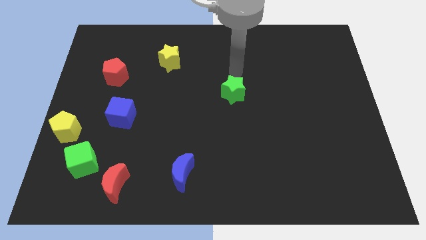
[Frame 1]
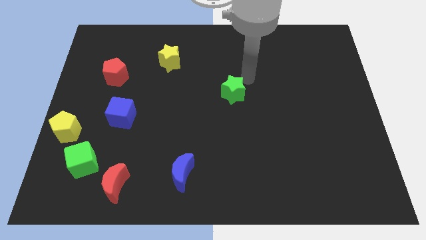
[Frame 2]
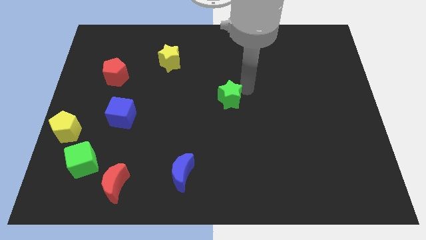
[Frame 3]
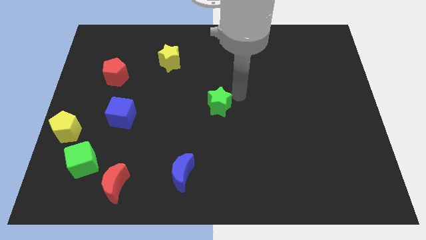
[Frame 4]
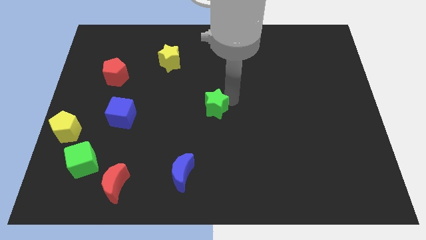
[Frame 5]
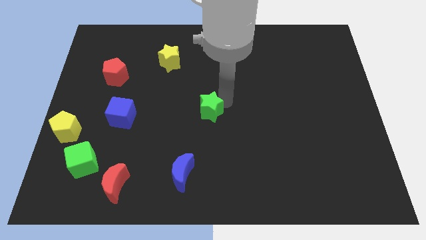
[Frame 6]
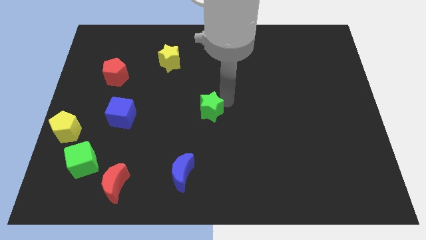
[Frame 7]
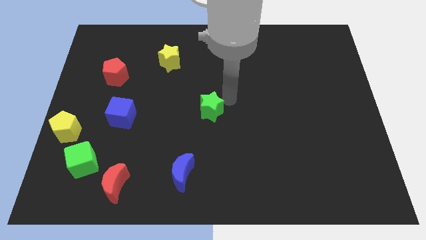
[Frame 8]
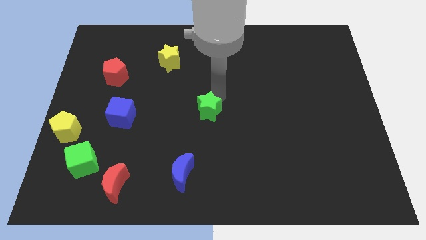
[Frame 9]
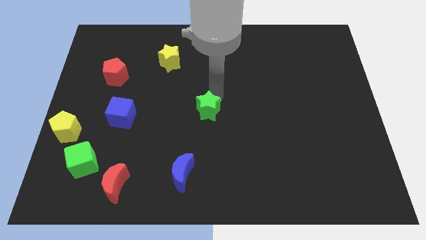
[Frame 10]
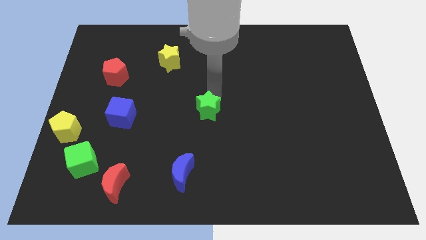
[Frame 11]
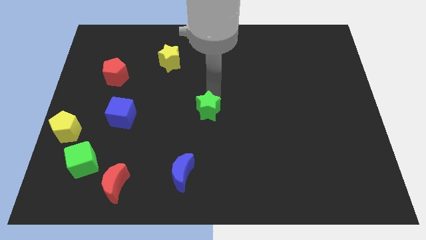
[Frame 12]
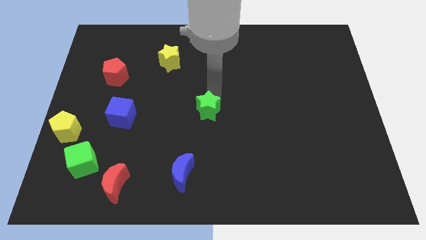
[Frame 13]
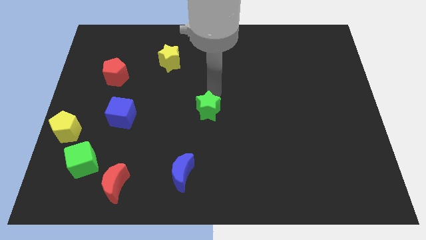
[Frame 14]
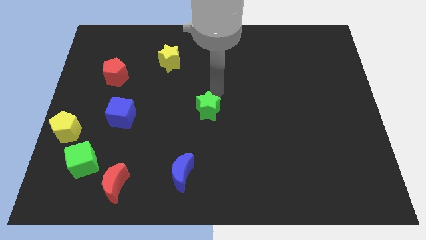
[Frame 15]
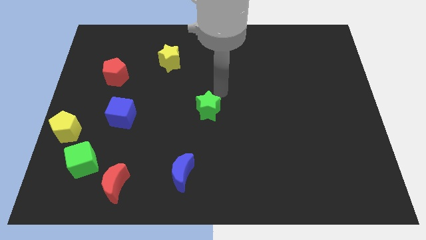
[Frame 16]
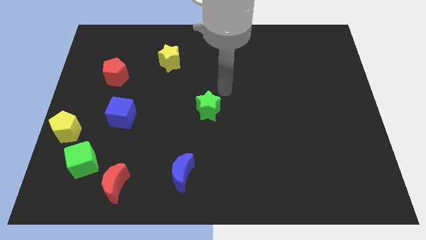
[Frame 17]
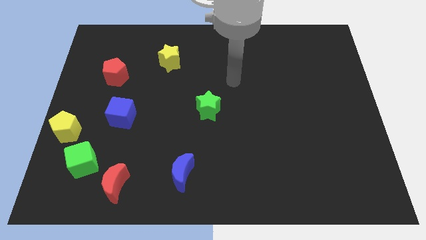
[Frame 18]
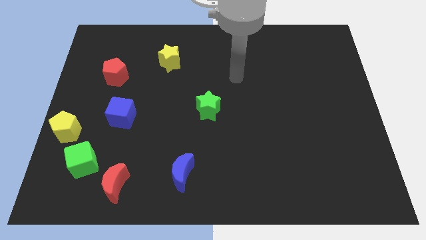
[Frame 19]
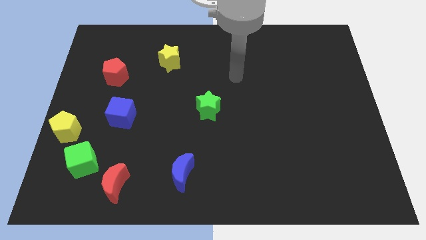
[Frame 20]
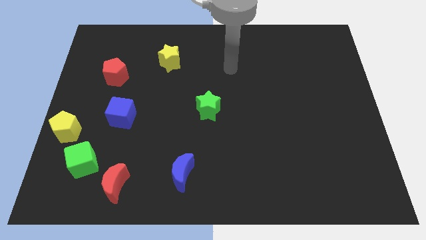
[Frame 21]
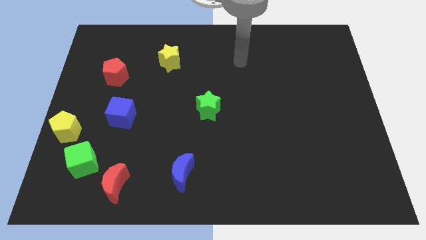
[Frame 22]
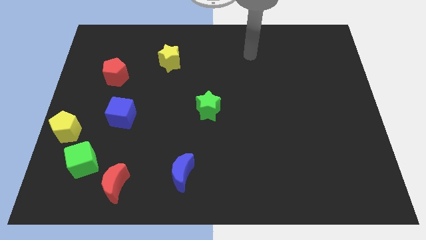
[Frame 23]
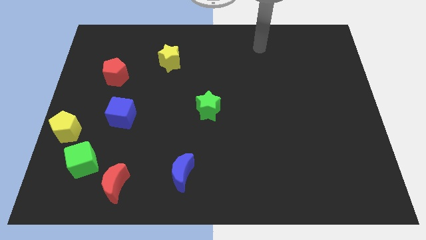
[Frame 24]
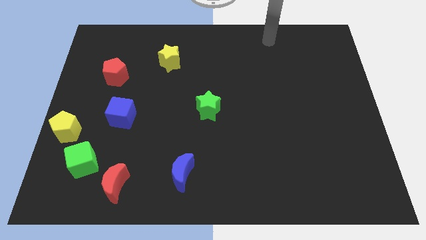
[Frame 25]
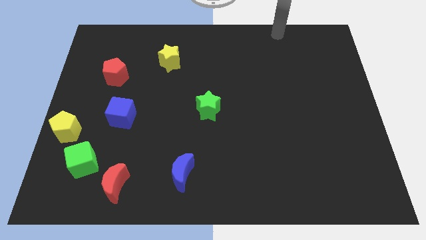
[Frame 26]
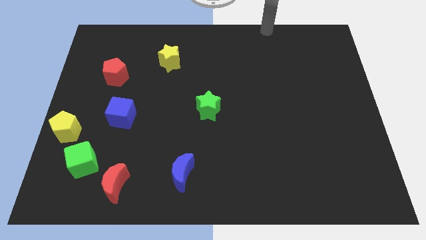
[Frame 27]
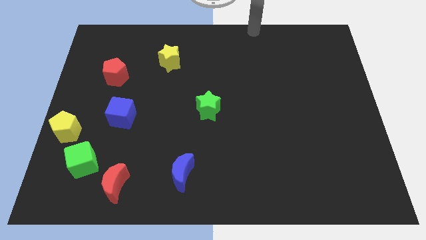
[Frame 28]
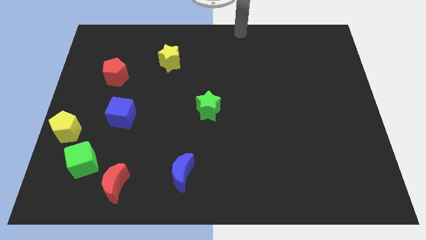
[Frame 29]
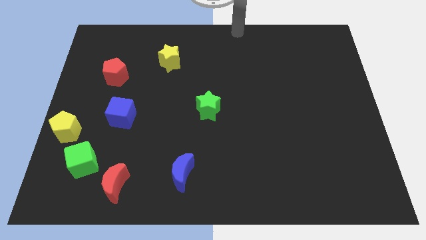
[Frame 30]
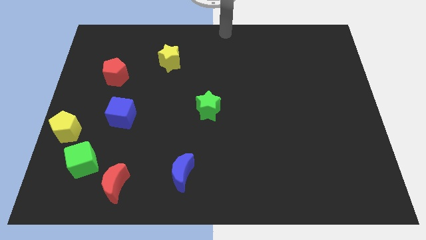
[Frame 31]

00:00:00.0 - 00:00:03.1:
place the arm in the top middle

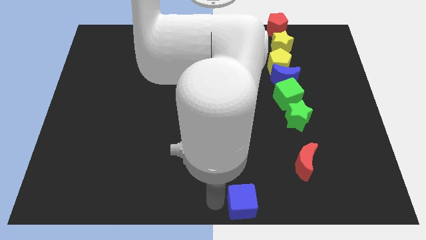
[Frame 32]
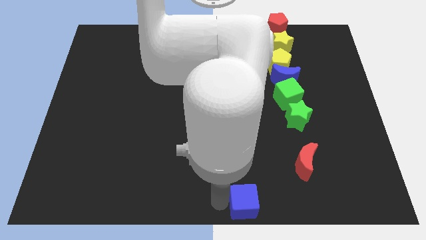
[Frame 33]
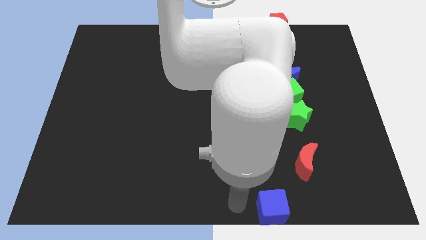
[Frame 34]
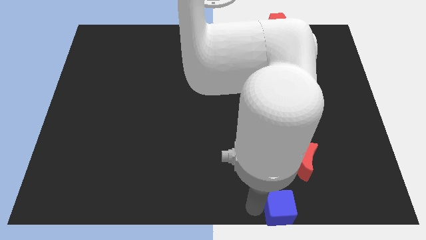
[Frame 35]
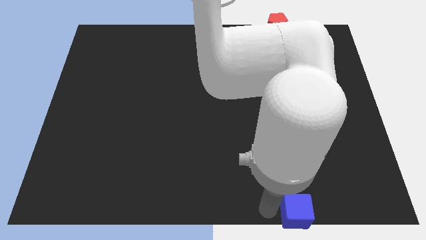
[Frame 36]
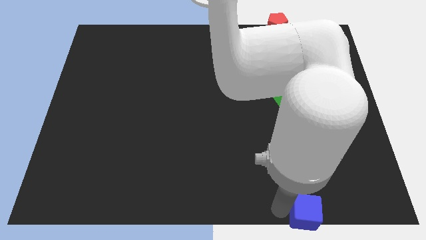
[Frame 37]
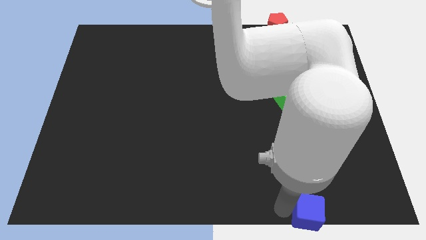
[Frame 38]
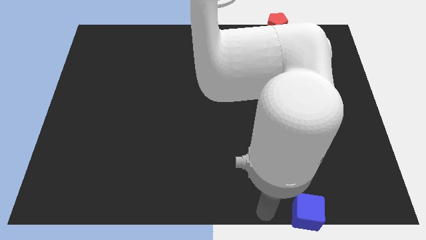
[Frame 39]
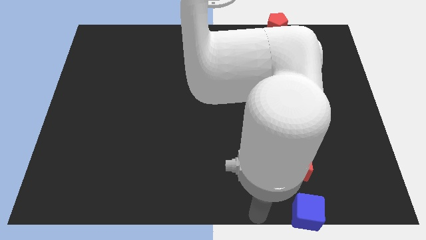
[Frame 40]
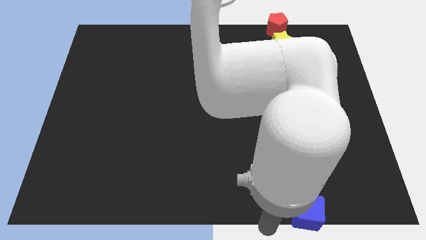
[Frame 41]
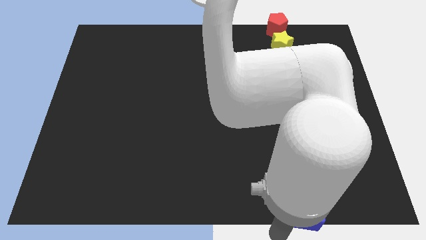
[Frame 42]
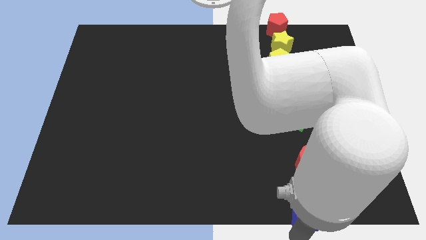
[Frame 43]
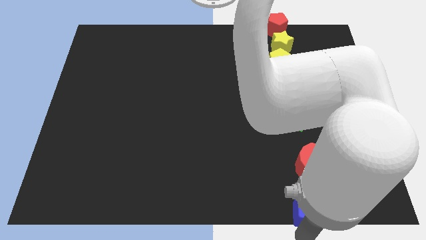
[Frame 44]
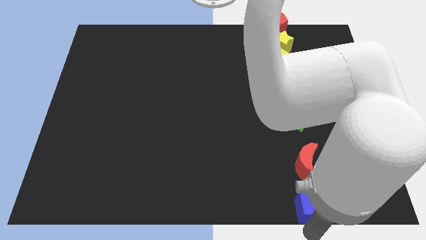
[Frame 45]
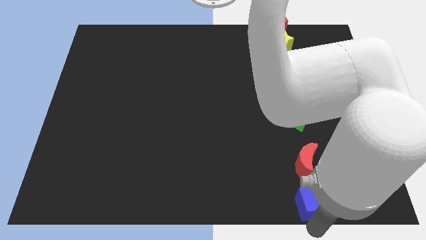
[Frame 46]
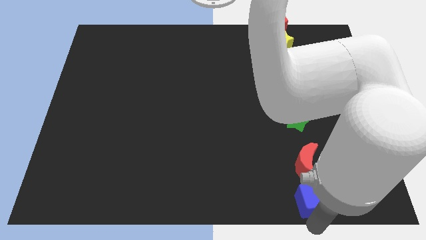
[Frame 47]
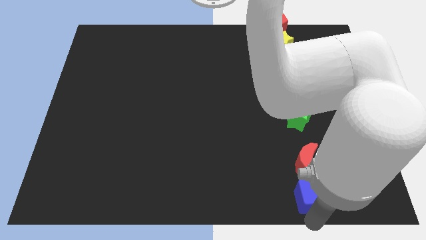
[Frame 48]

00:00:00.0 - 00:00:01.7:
place the blue cube below the red crescent

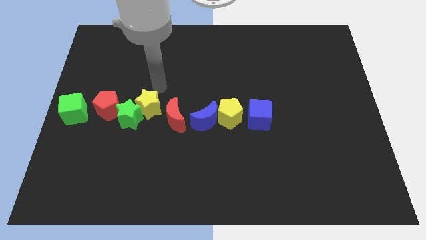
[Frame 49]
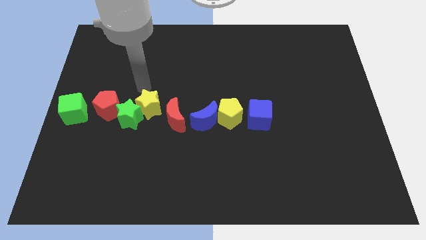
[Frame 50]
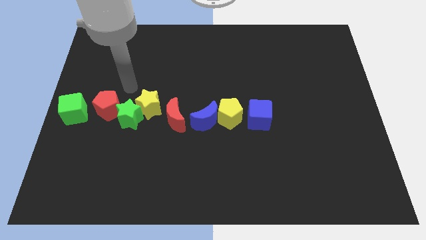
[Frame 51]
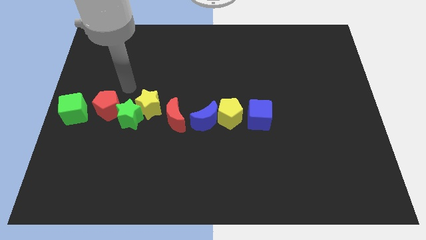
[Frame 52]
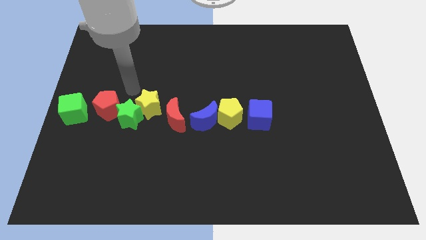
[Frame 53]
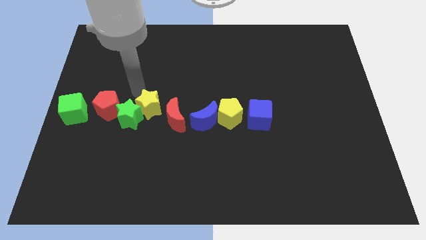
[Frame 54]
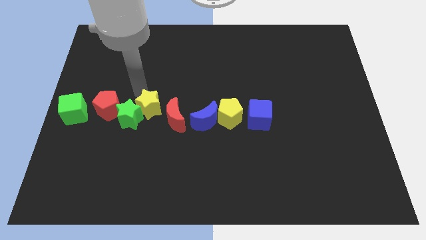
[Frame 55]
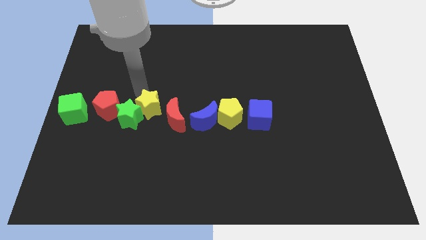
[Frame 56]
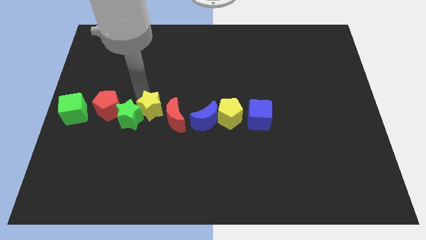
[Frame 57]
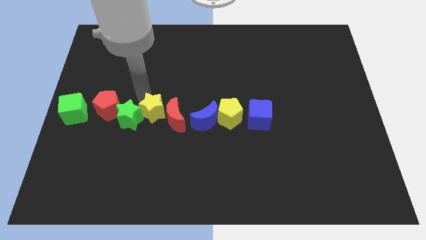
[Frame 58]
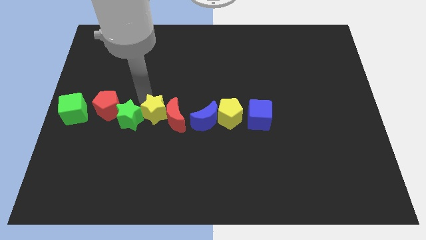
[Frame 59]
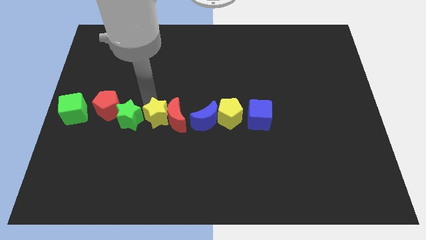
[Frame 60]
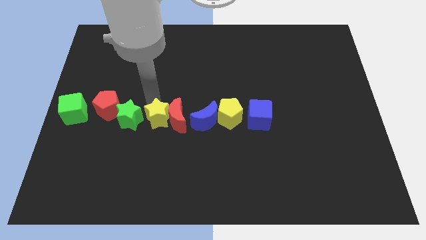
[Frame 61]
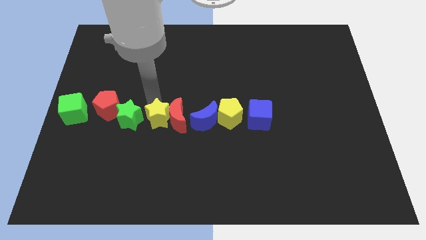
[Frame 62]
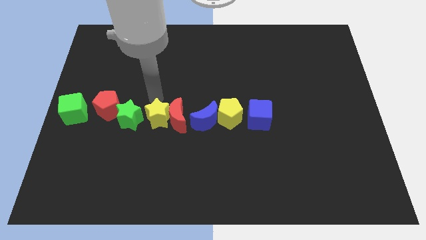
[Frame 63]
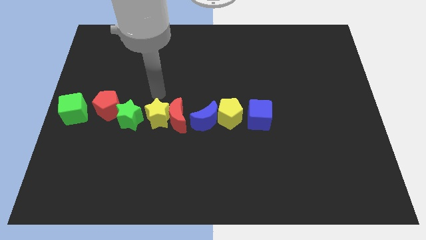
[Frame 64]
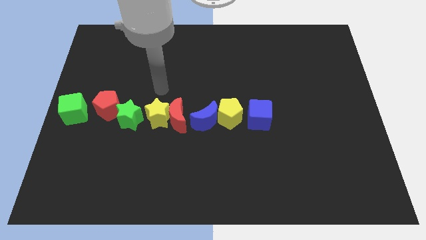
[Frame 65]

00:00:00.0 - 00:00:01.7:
push the yellow star slightly towards down

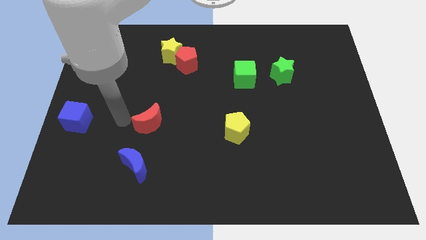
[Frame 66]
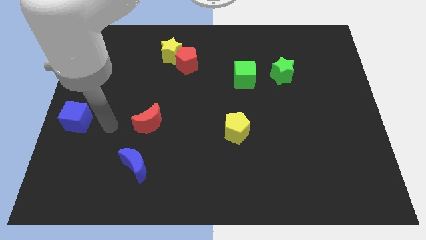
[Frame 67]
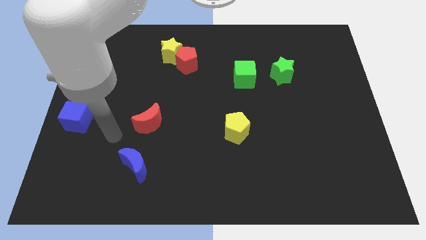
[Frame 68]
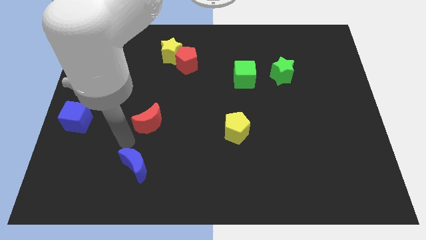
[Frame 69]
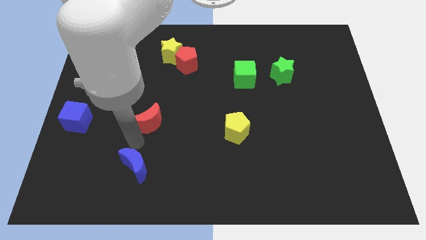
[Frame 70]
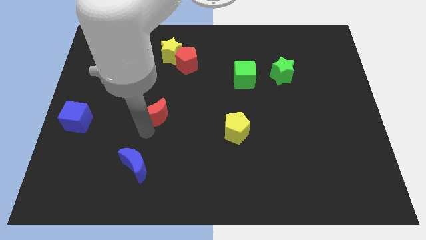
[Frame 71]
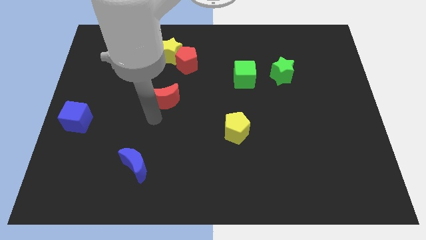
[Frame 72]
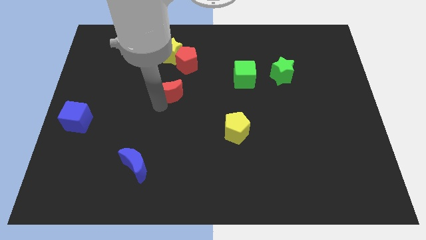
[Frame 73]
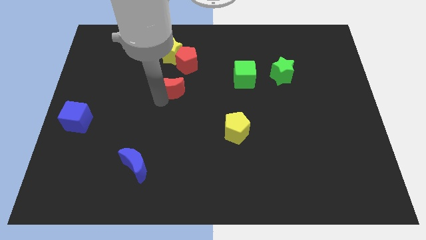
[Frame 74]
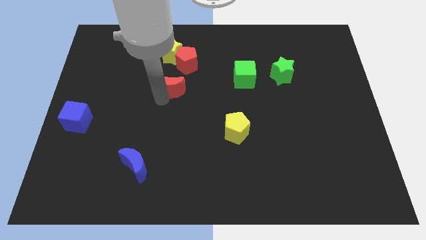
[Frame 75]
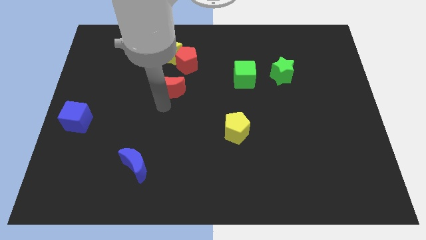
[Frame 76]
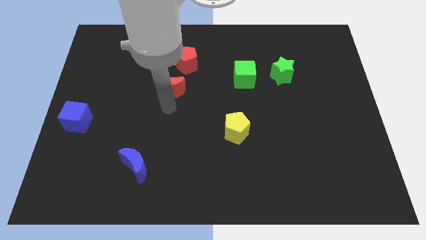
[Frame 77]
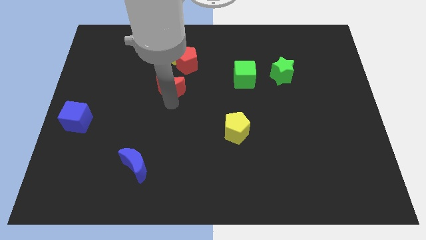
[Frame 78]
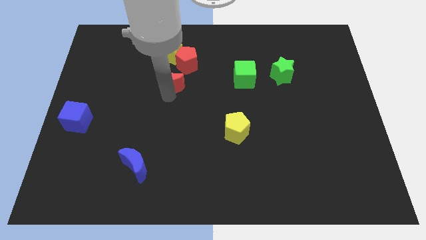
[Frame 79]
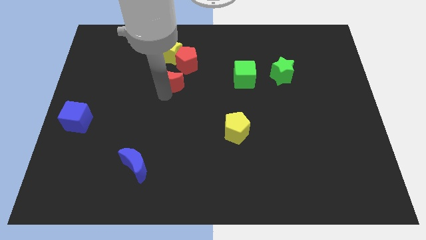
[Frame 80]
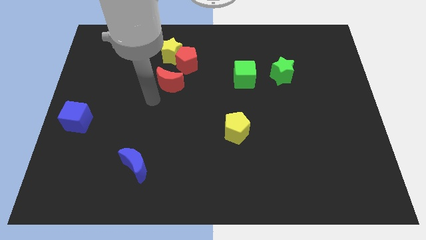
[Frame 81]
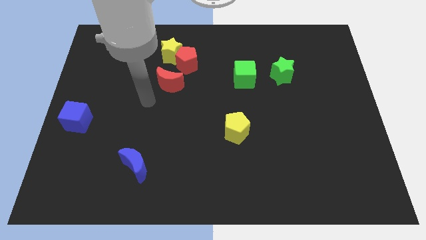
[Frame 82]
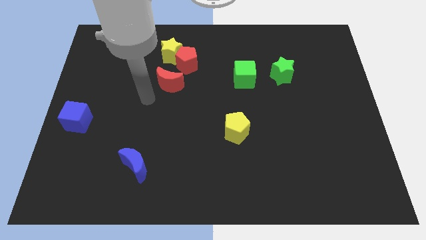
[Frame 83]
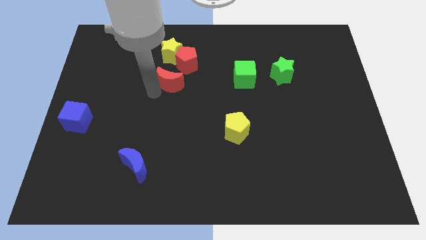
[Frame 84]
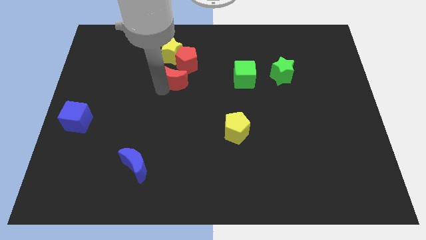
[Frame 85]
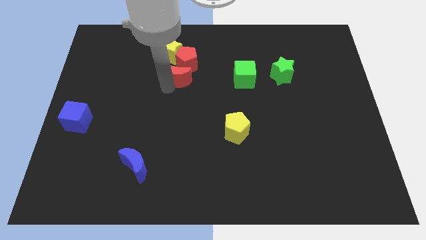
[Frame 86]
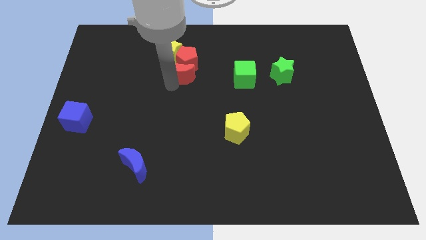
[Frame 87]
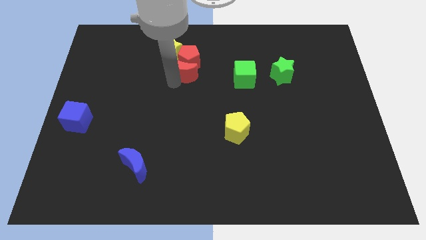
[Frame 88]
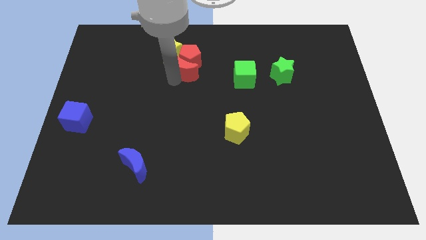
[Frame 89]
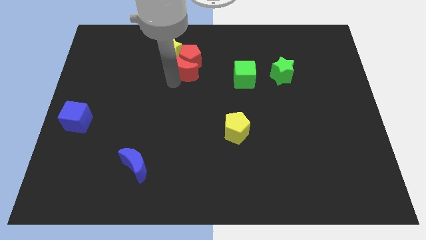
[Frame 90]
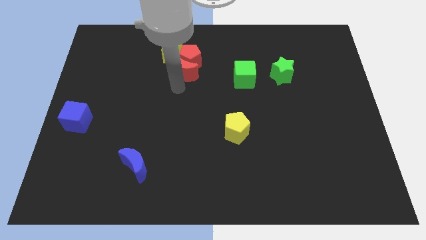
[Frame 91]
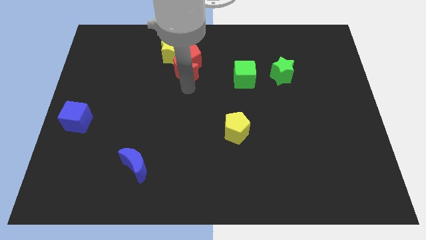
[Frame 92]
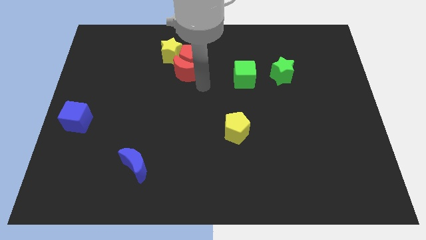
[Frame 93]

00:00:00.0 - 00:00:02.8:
move the red crescent into the red pentagon
